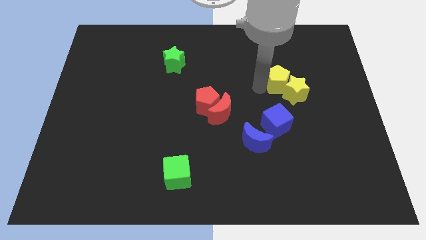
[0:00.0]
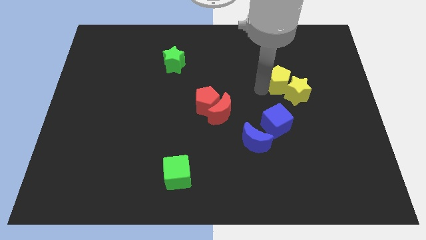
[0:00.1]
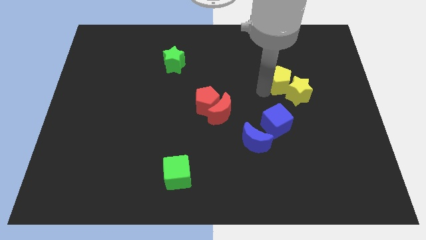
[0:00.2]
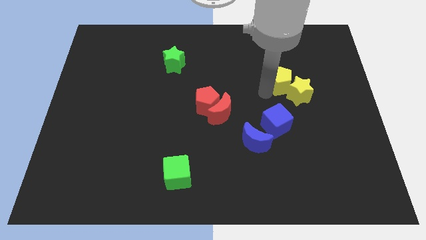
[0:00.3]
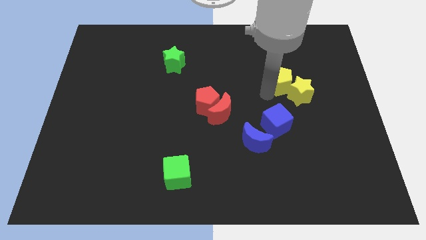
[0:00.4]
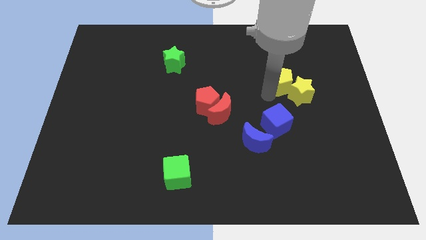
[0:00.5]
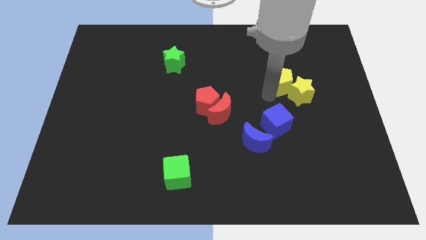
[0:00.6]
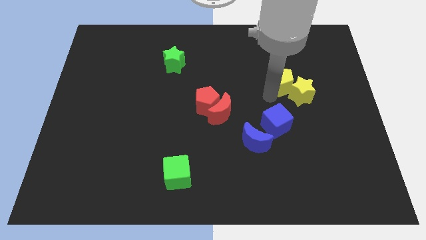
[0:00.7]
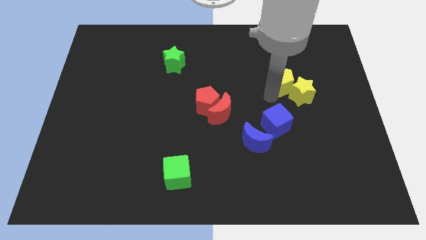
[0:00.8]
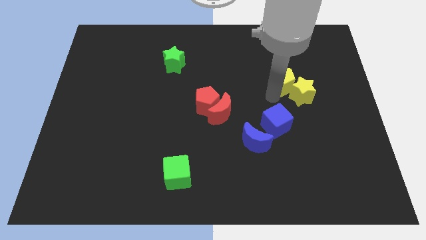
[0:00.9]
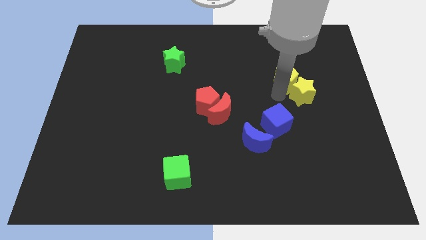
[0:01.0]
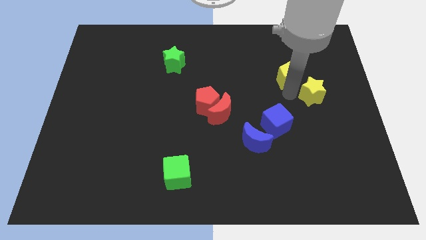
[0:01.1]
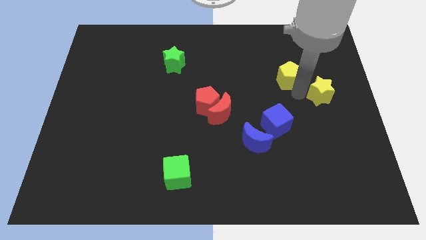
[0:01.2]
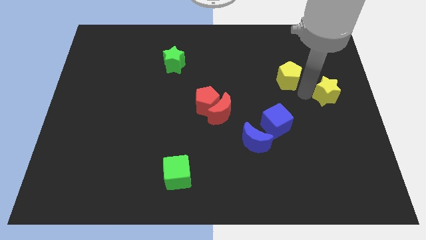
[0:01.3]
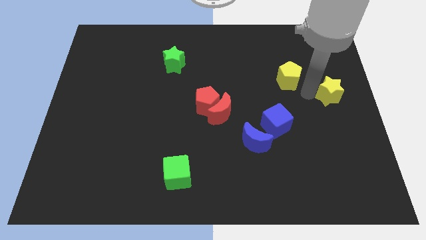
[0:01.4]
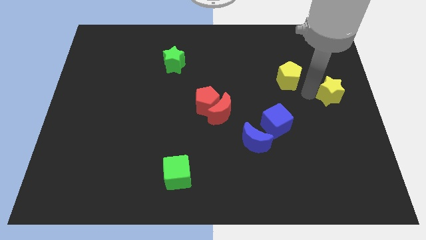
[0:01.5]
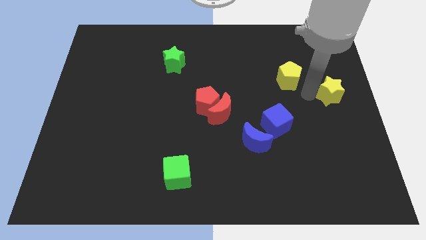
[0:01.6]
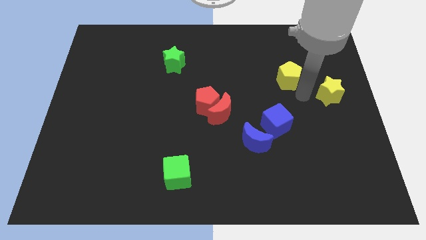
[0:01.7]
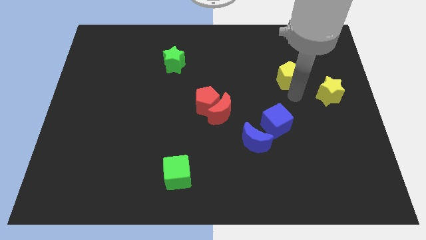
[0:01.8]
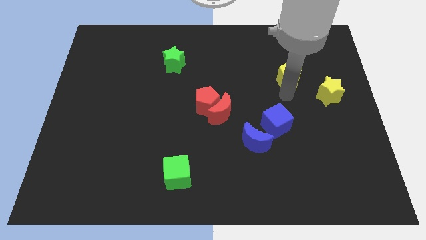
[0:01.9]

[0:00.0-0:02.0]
move the yellow star towards the right center of the board

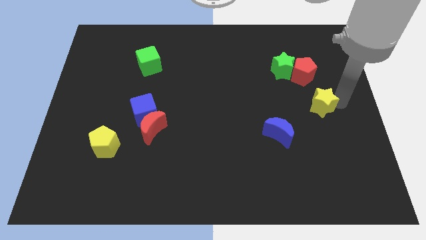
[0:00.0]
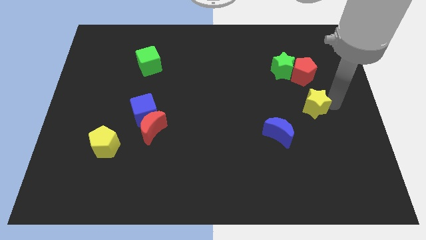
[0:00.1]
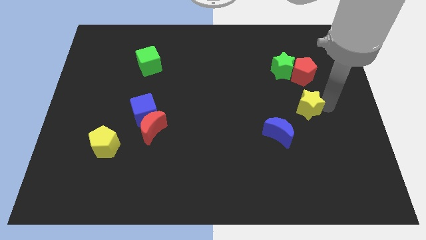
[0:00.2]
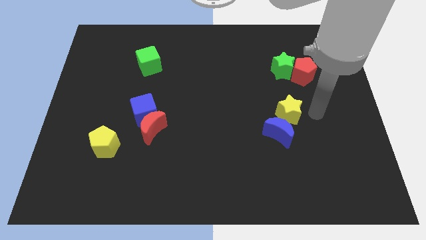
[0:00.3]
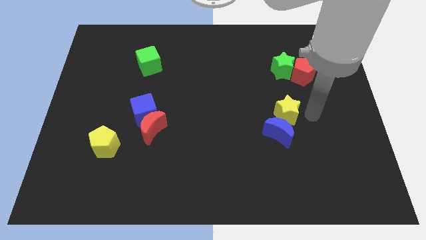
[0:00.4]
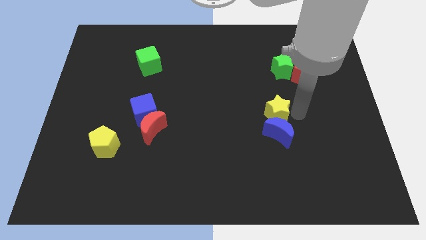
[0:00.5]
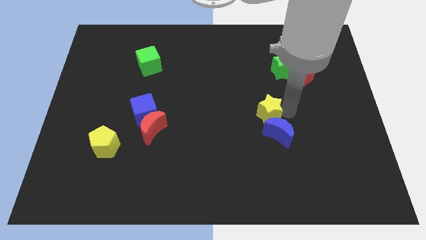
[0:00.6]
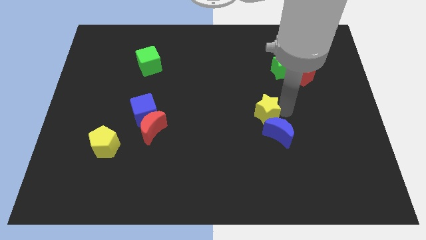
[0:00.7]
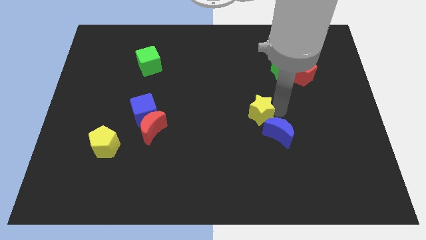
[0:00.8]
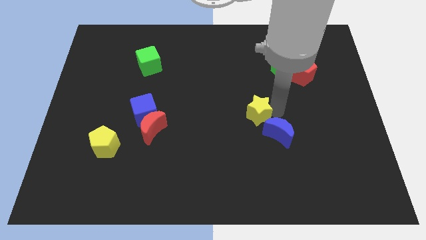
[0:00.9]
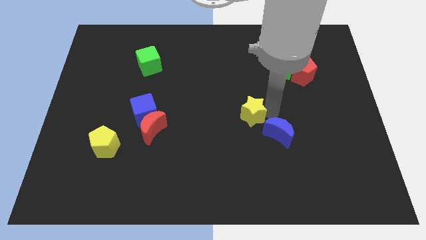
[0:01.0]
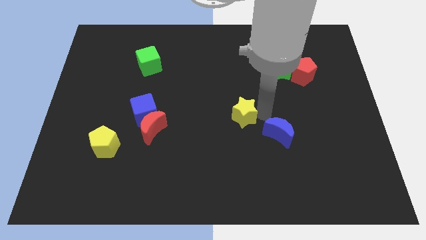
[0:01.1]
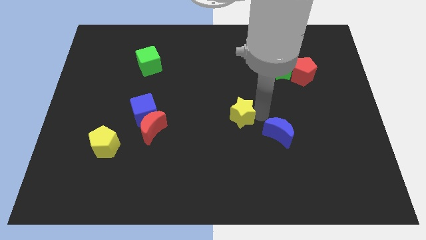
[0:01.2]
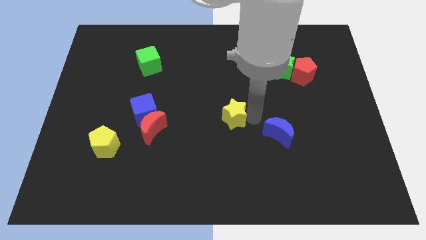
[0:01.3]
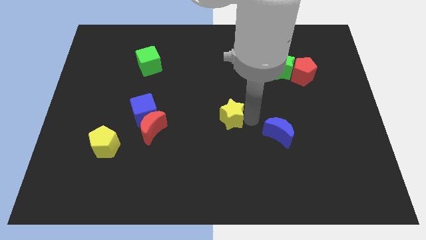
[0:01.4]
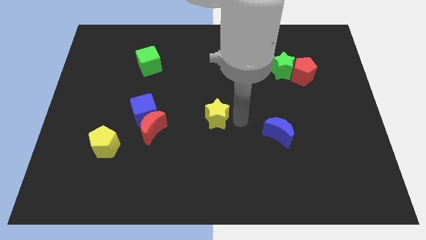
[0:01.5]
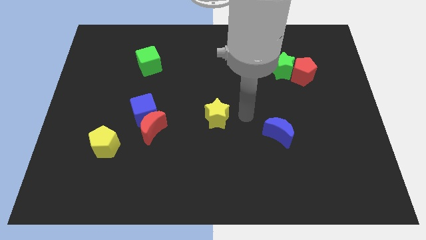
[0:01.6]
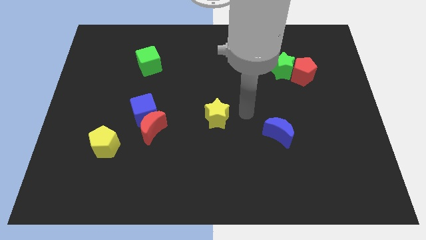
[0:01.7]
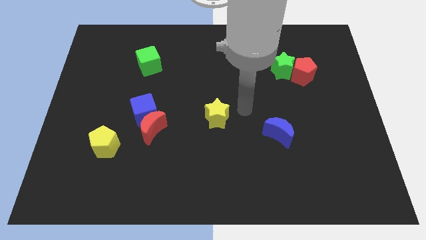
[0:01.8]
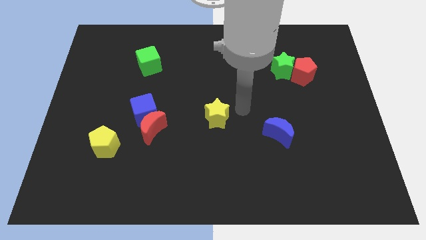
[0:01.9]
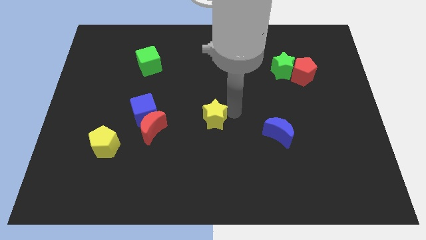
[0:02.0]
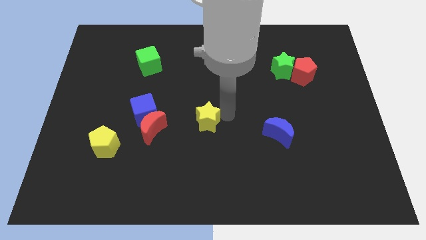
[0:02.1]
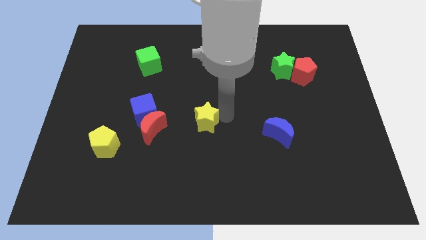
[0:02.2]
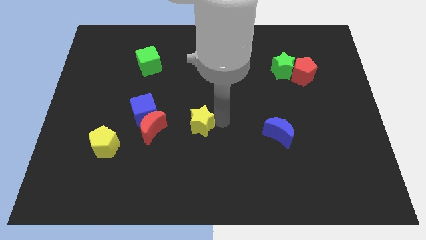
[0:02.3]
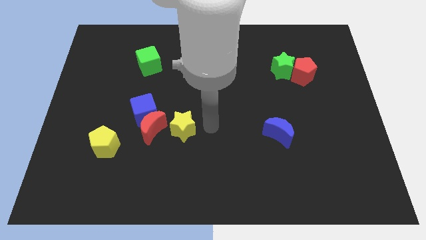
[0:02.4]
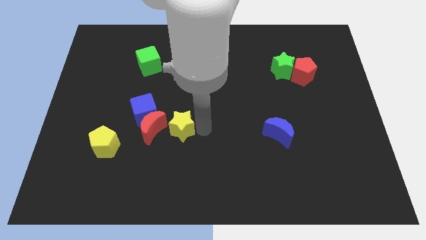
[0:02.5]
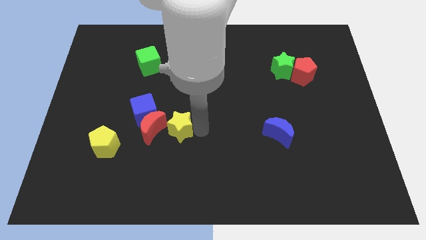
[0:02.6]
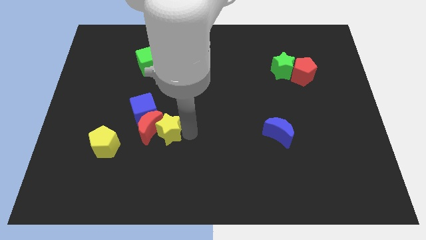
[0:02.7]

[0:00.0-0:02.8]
move the yellow star to the right of the red crescent

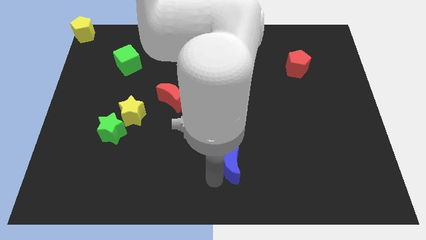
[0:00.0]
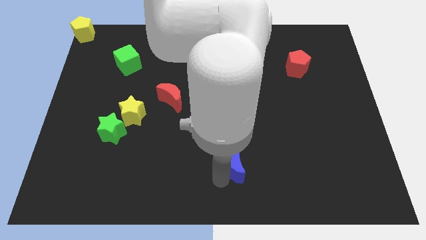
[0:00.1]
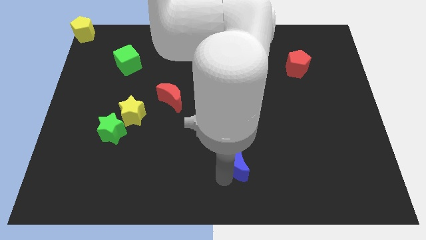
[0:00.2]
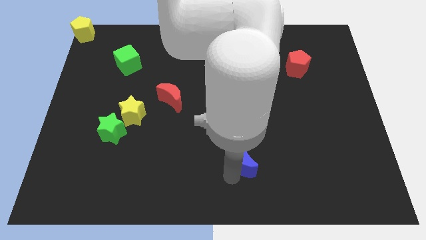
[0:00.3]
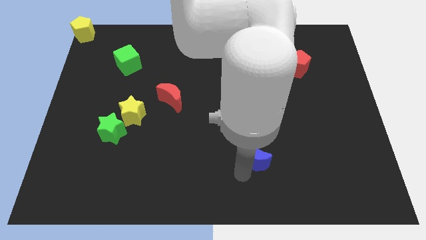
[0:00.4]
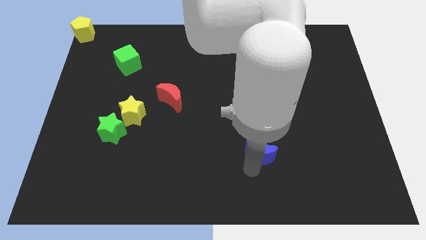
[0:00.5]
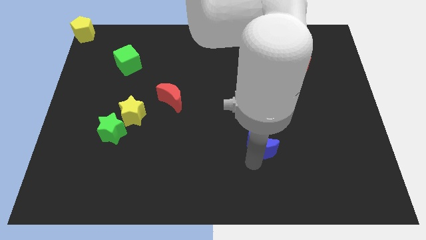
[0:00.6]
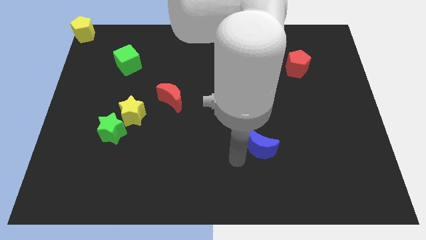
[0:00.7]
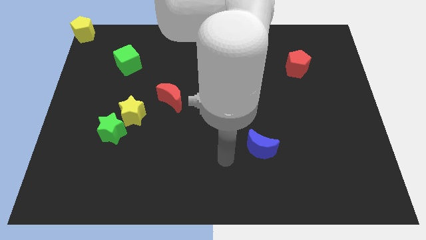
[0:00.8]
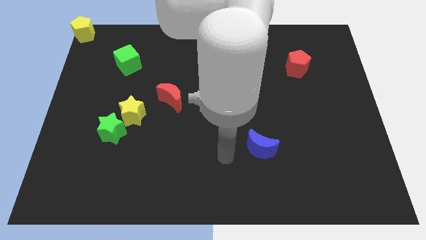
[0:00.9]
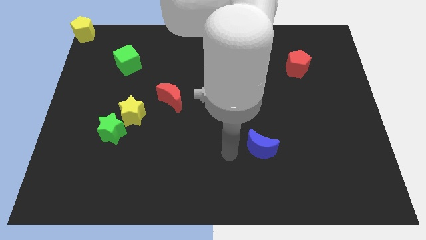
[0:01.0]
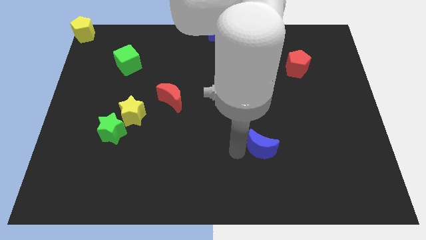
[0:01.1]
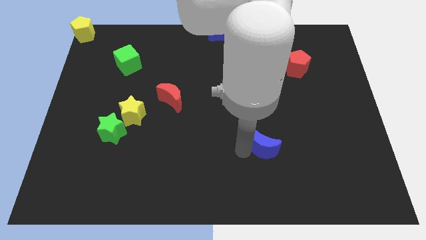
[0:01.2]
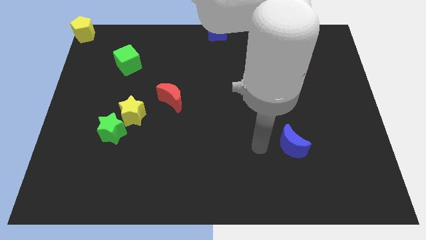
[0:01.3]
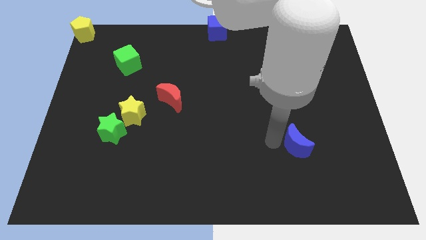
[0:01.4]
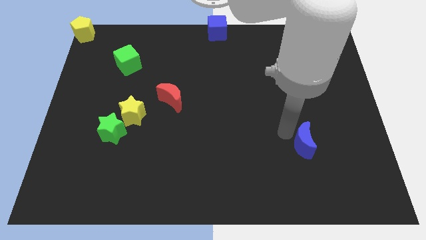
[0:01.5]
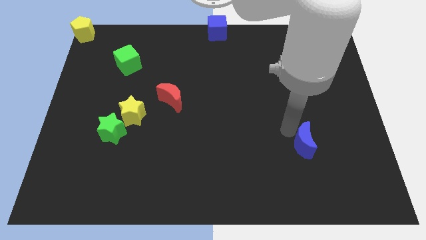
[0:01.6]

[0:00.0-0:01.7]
put the blue moon vertically below the red pentagon

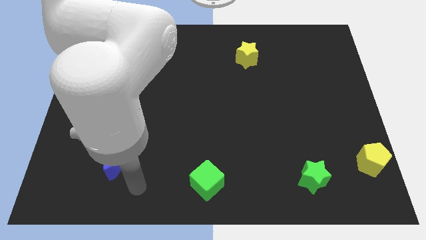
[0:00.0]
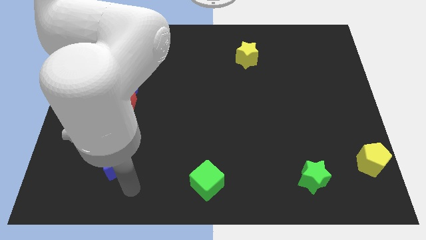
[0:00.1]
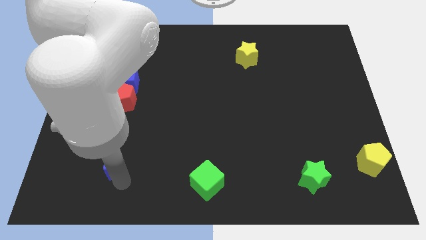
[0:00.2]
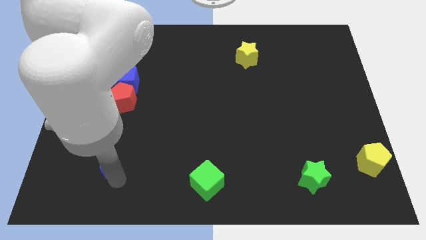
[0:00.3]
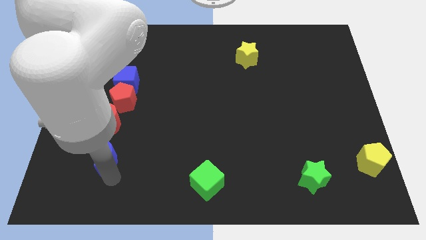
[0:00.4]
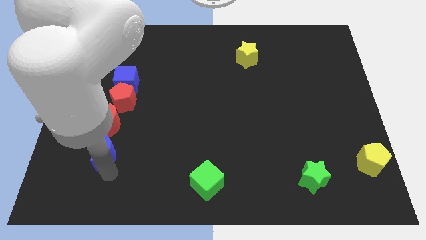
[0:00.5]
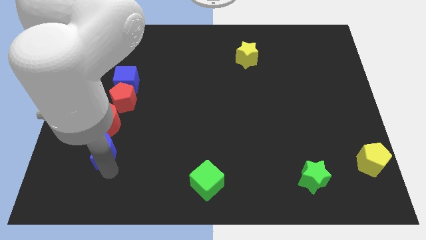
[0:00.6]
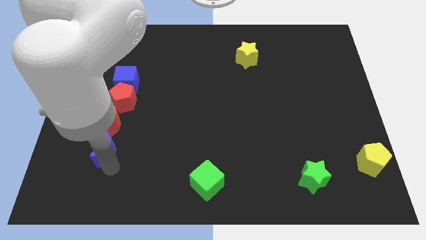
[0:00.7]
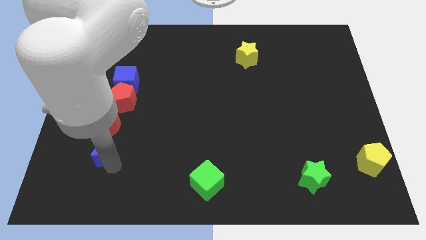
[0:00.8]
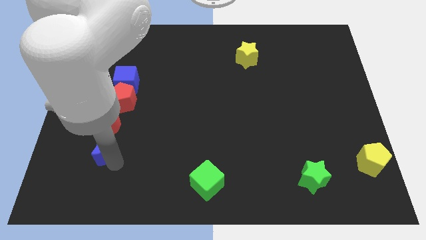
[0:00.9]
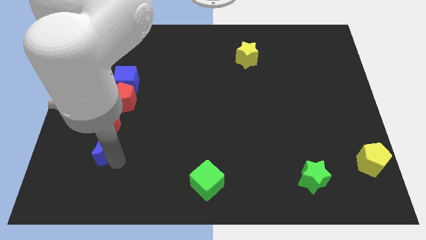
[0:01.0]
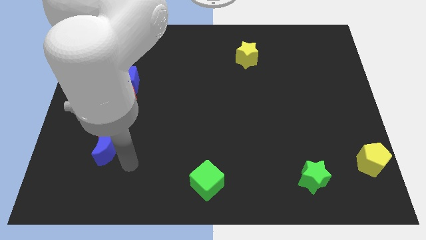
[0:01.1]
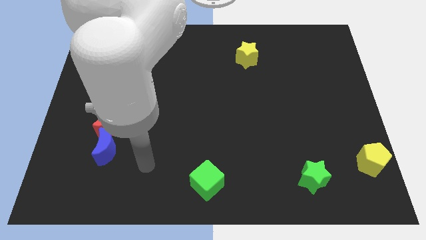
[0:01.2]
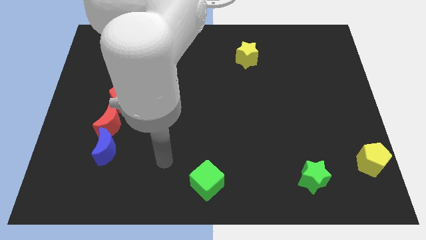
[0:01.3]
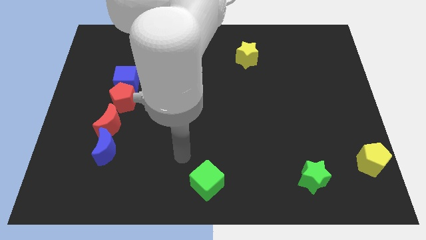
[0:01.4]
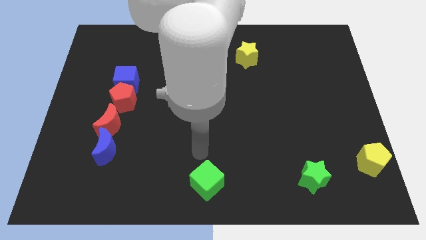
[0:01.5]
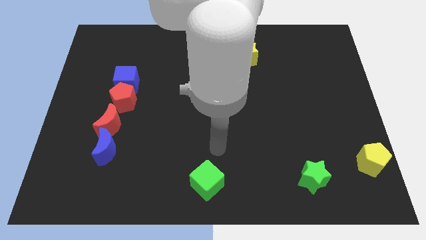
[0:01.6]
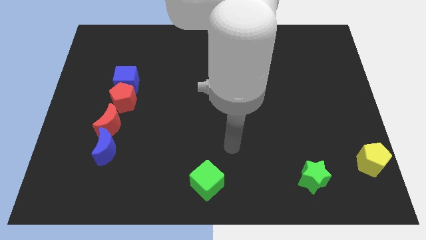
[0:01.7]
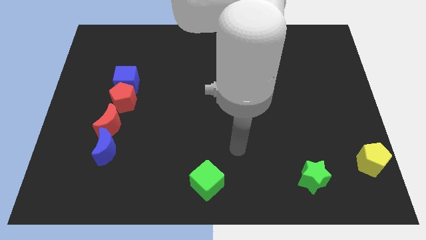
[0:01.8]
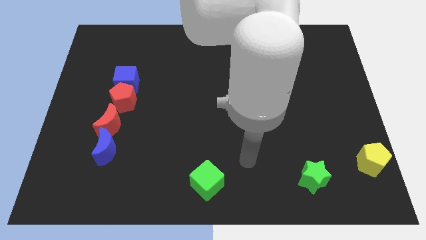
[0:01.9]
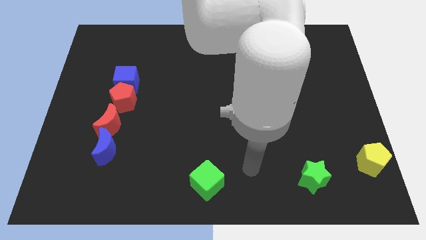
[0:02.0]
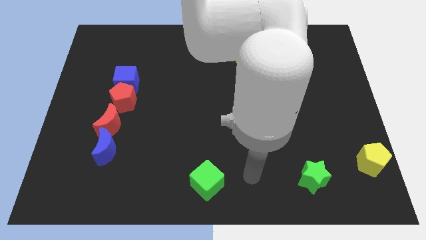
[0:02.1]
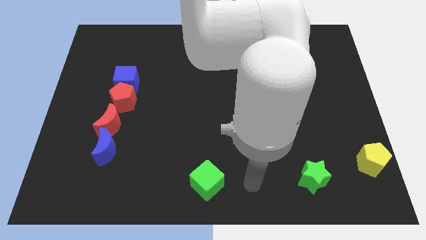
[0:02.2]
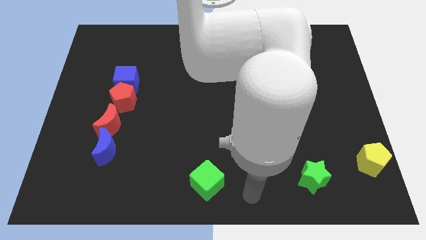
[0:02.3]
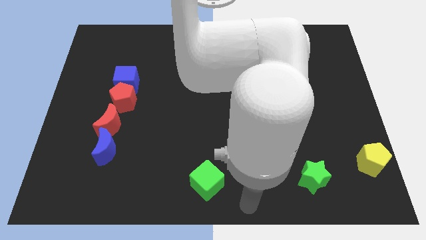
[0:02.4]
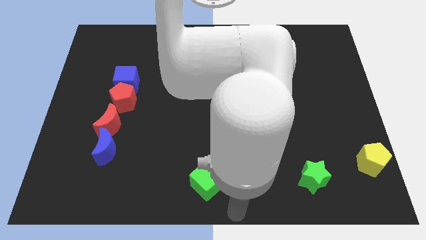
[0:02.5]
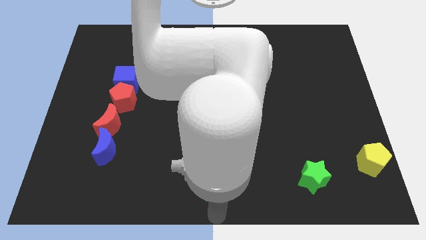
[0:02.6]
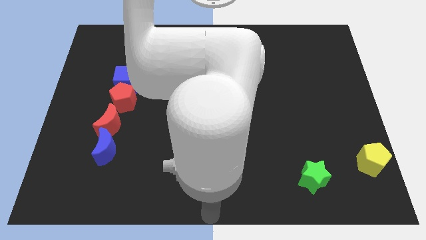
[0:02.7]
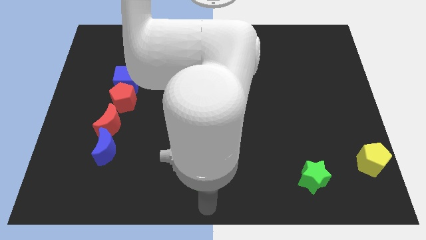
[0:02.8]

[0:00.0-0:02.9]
move your arm from blue crescent to the bottom of green cube
